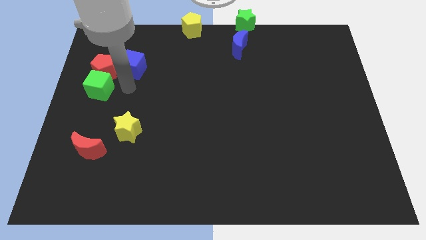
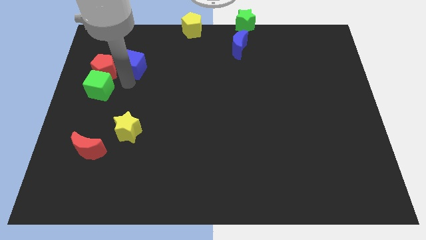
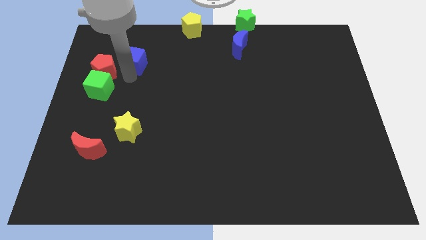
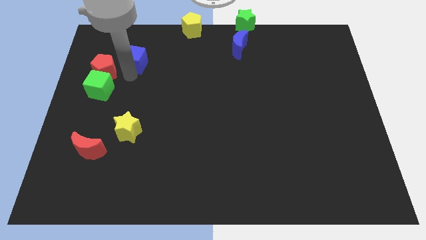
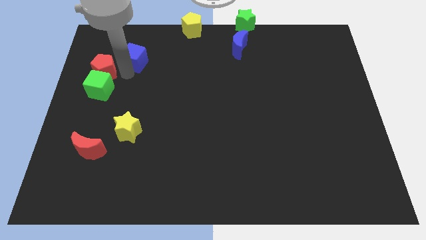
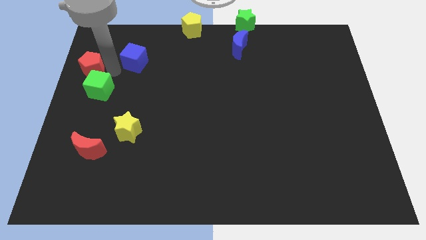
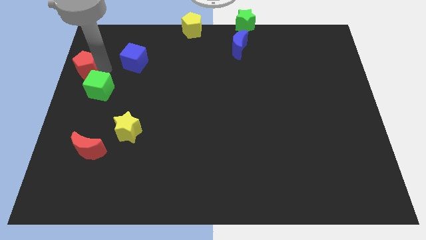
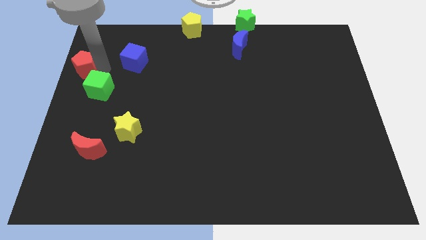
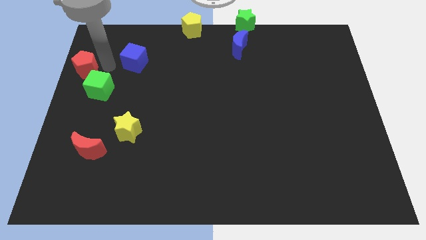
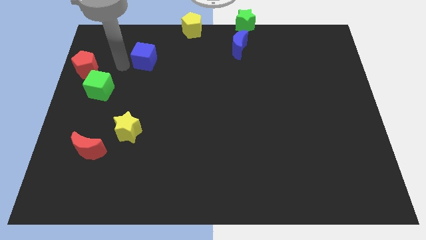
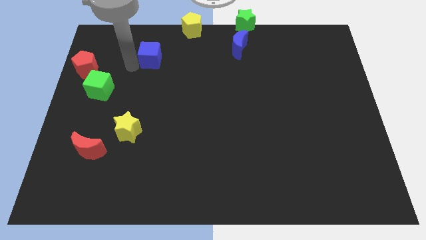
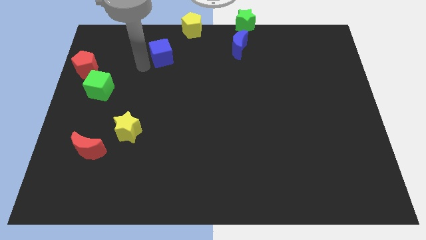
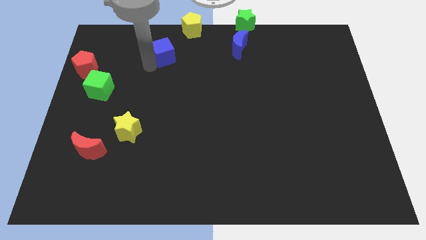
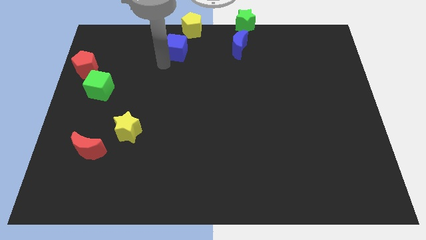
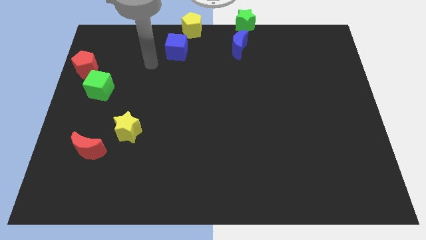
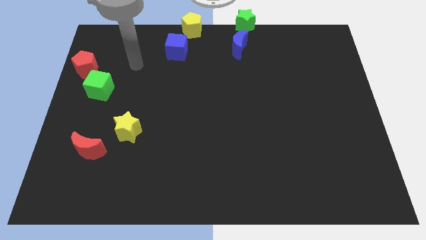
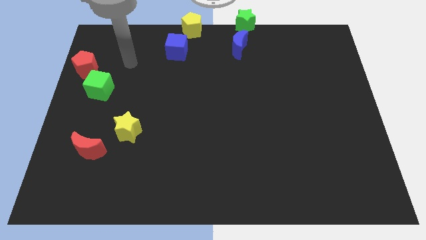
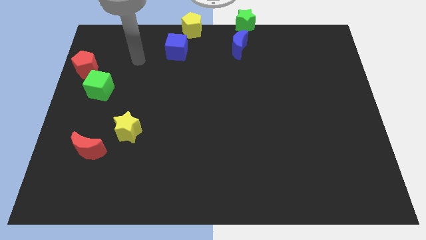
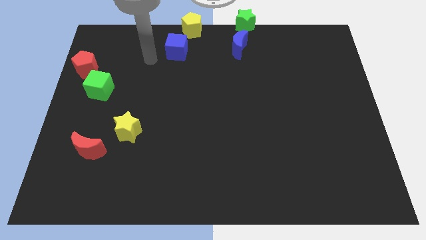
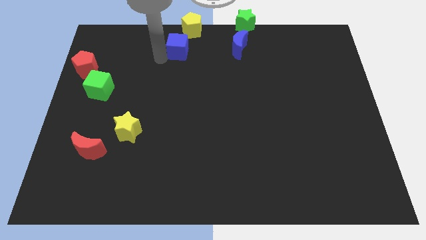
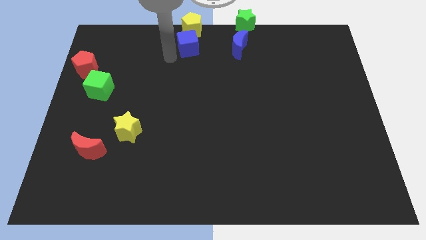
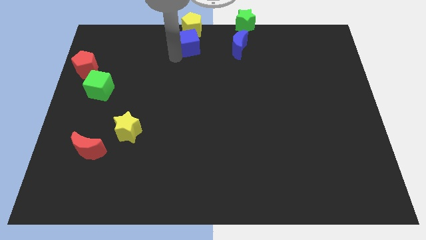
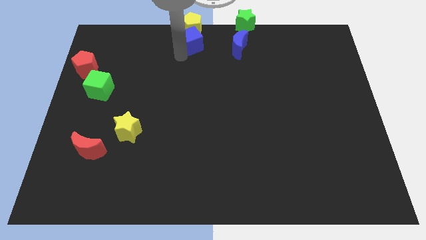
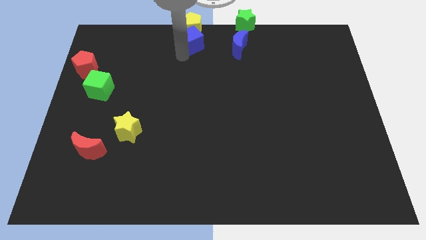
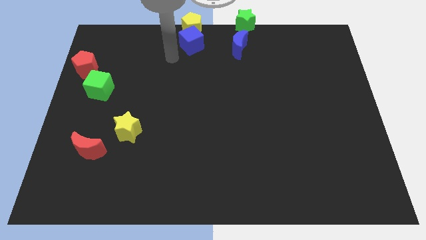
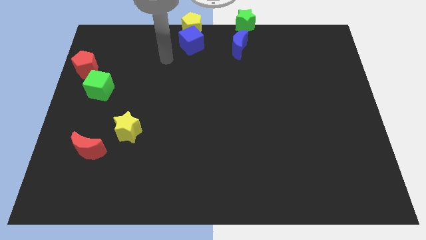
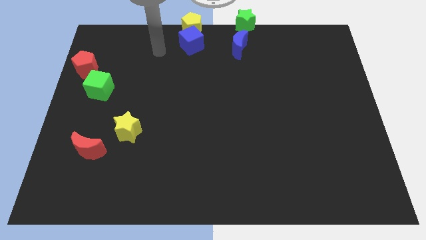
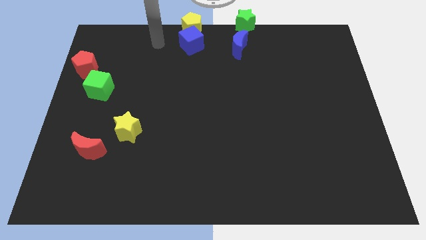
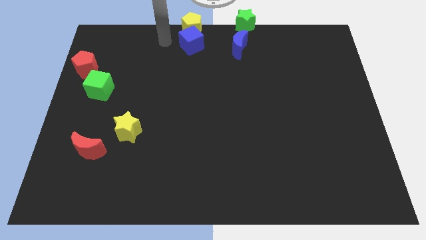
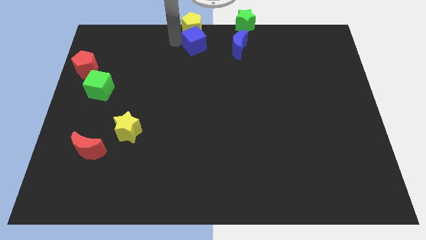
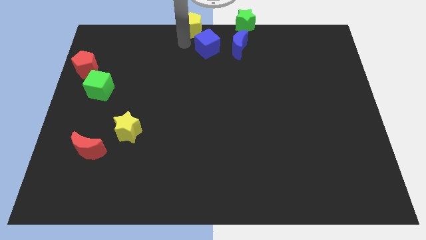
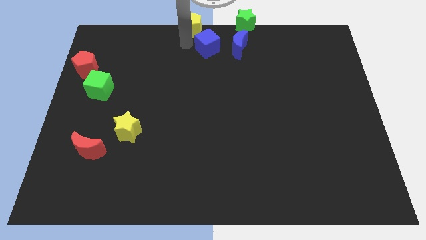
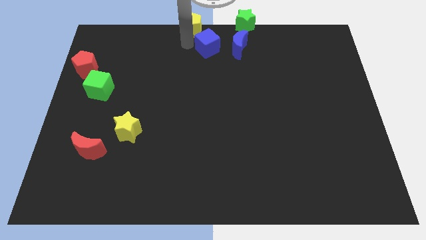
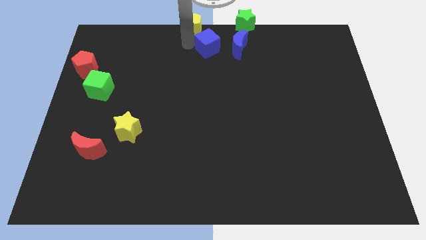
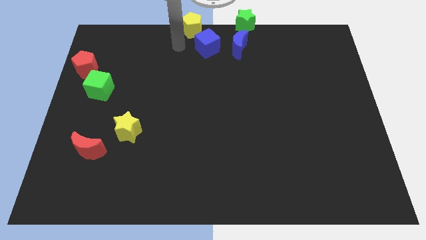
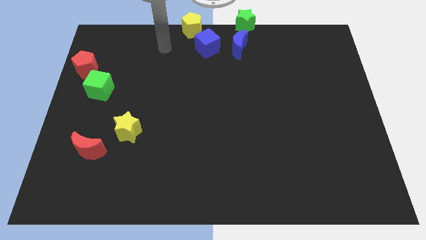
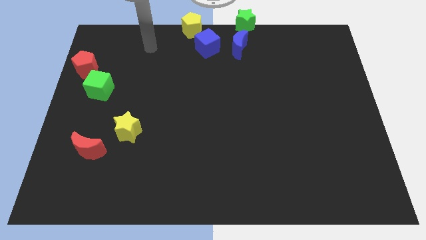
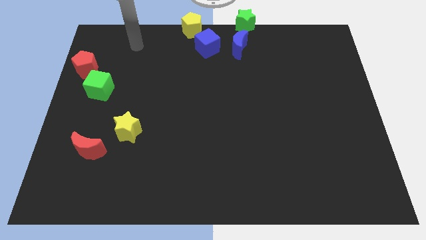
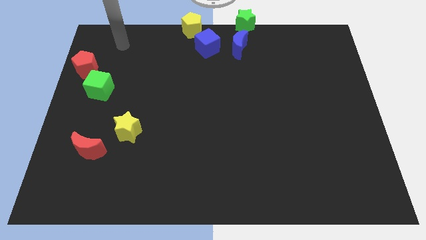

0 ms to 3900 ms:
place the blue cube diagonal to the yellow pentagon

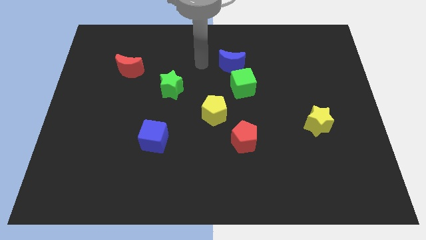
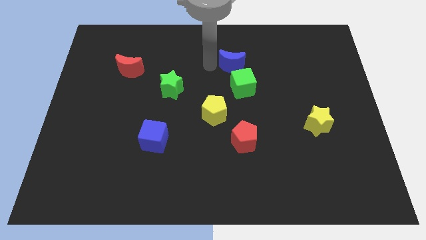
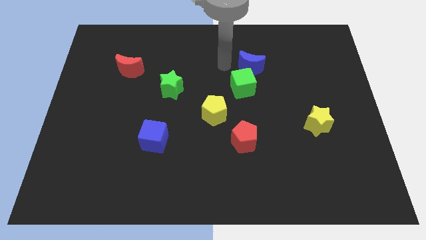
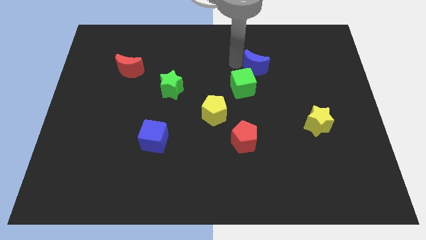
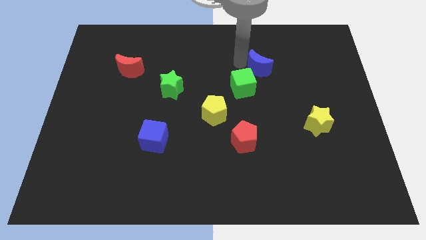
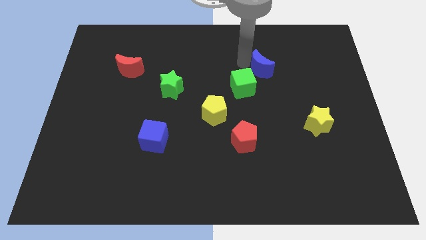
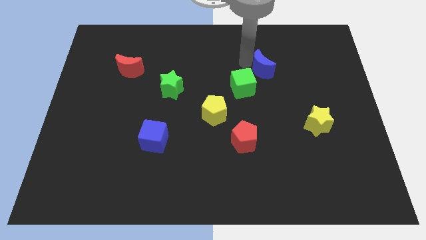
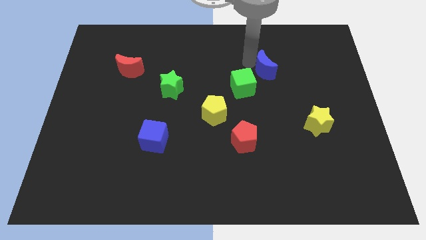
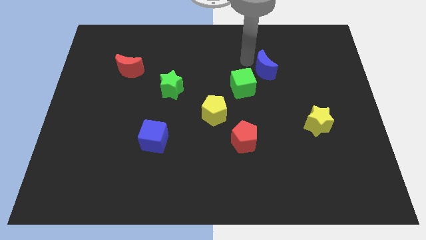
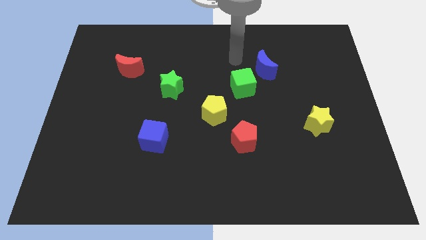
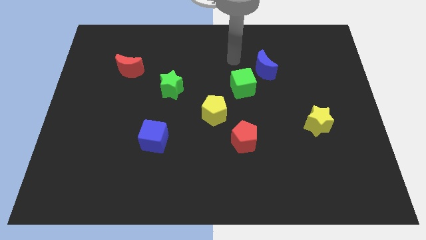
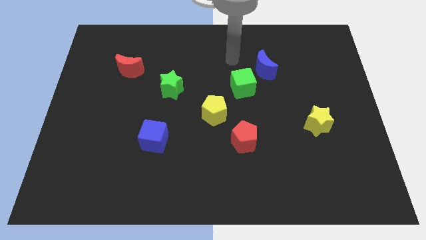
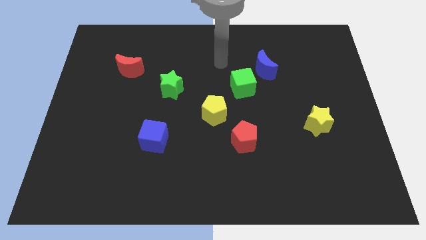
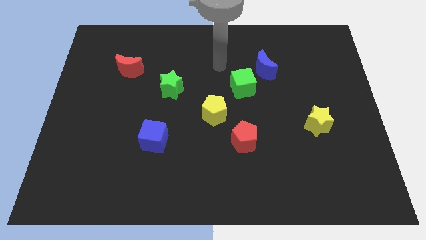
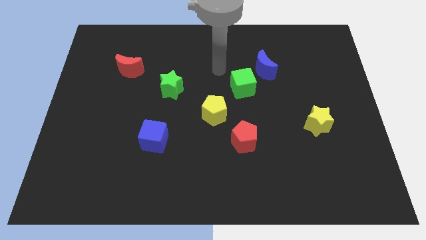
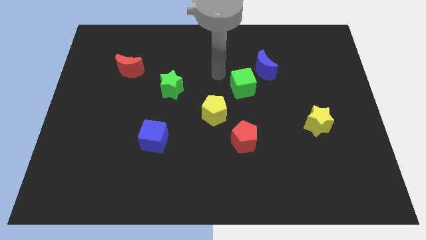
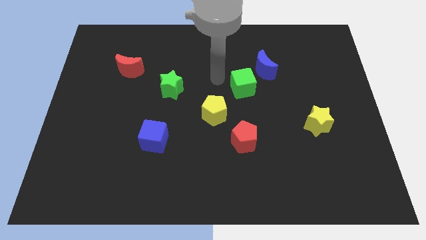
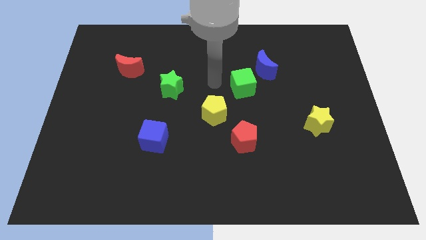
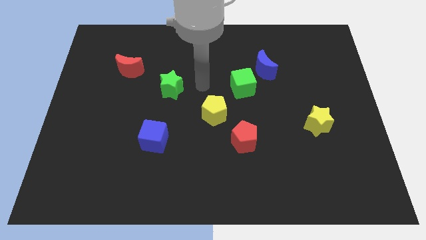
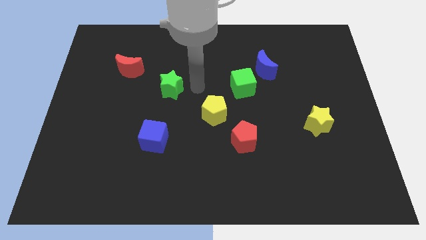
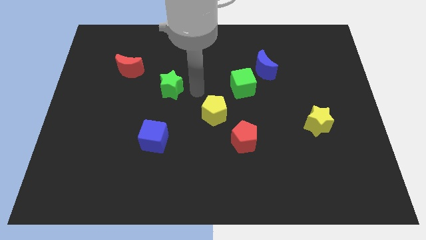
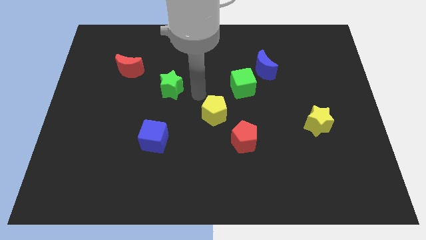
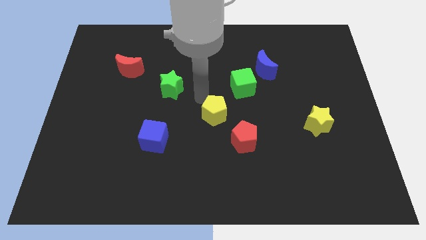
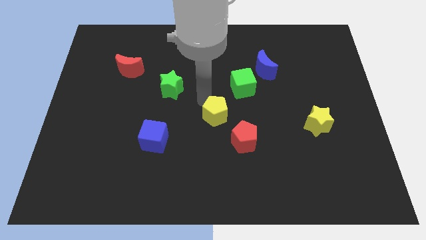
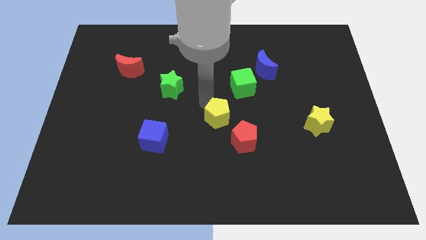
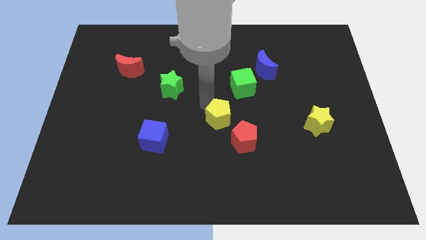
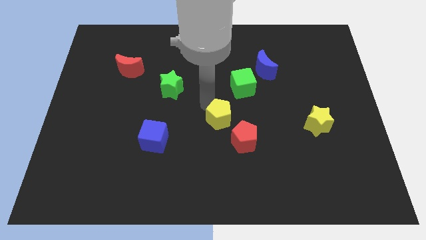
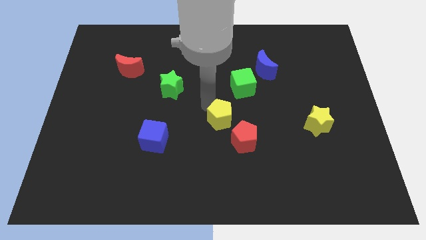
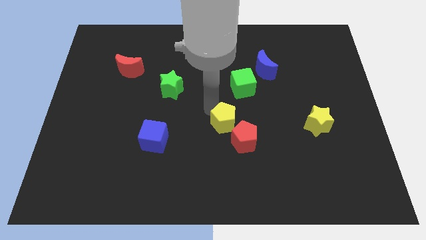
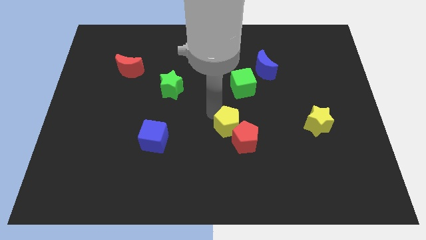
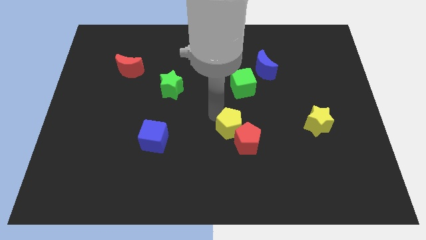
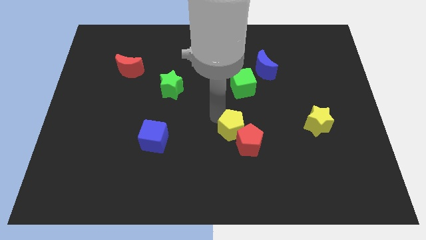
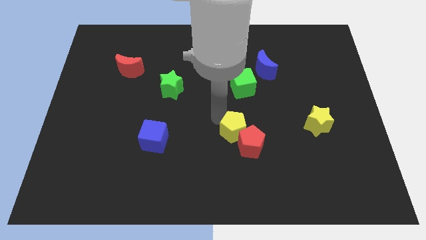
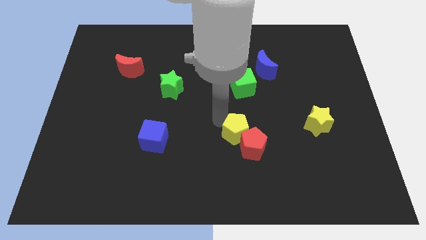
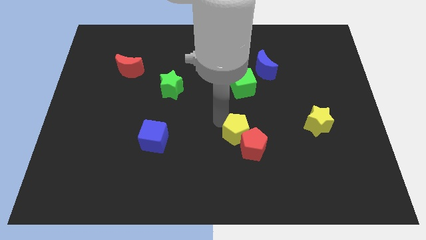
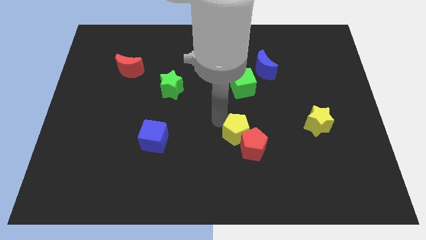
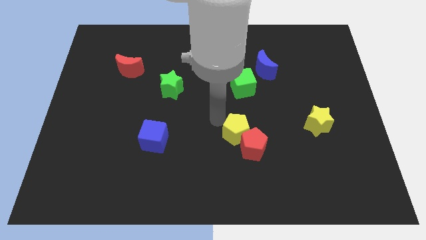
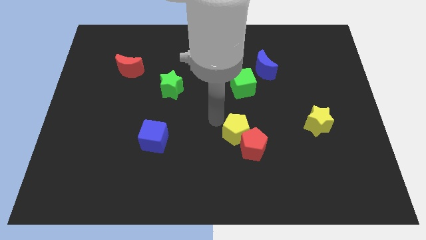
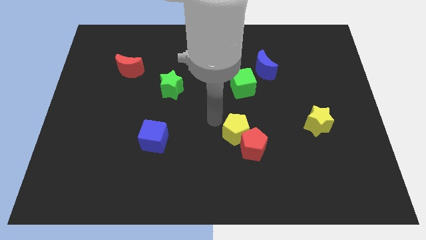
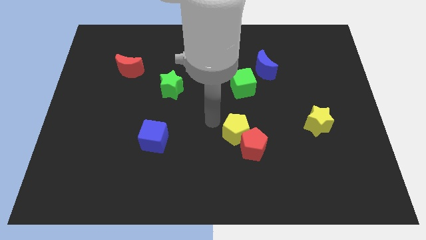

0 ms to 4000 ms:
push the yellow pentagon into the red pentagon

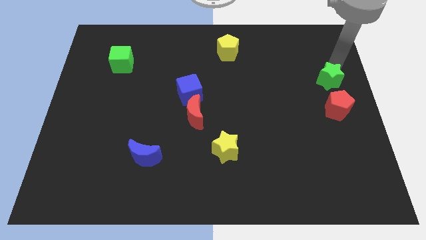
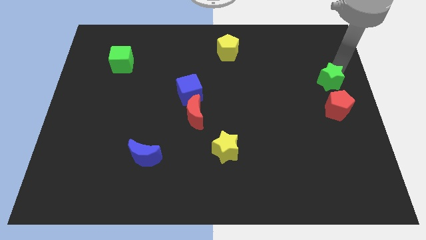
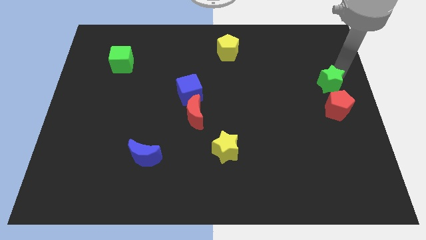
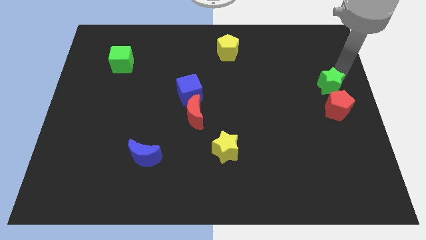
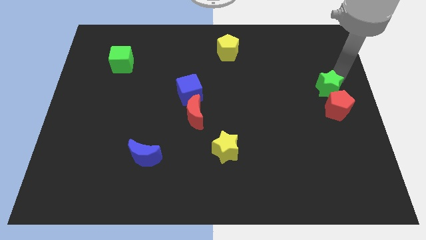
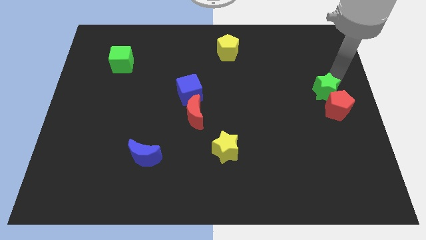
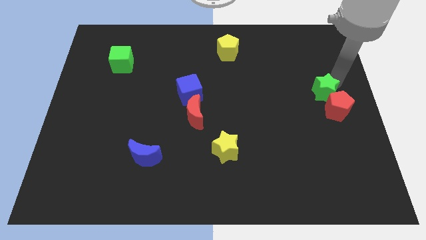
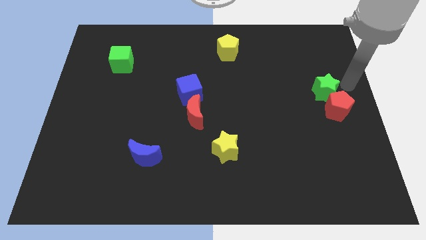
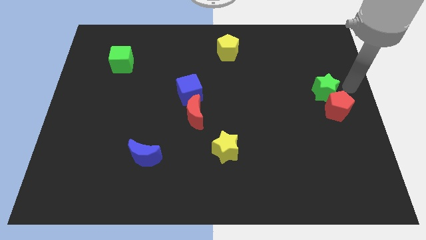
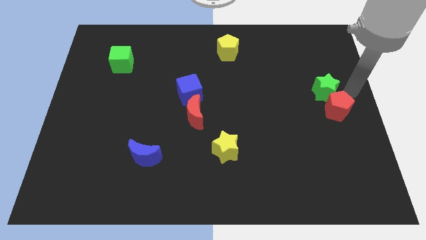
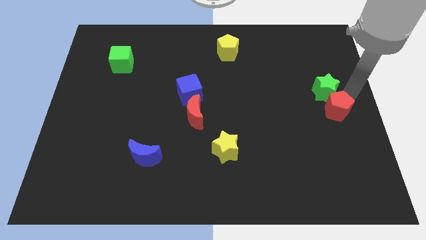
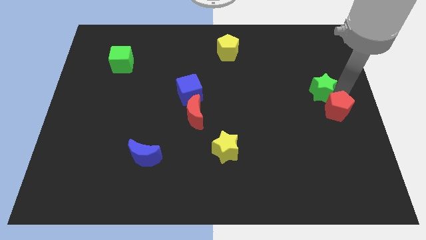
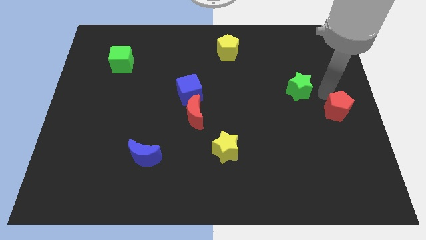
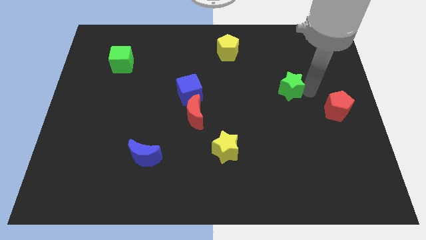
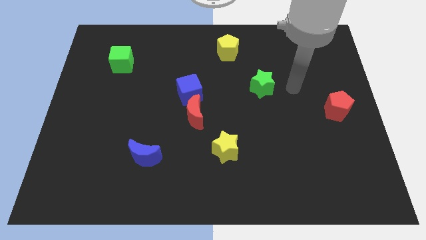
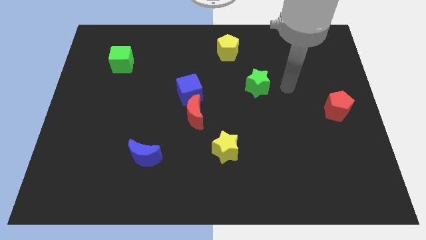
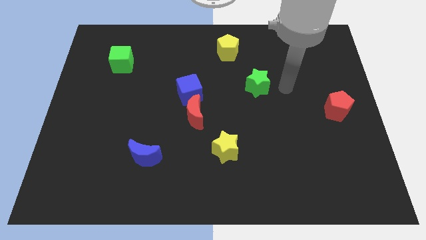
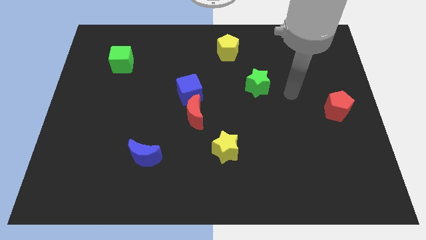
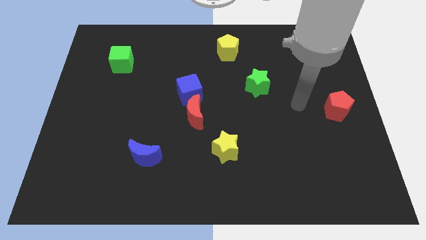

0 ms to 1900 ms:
move the green star away from the red pentagon
